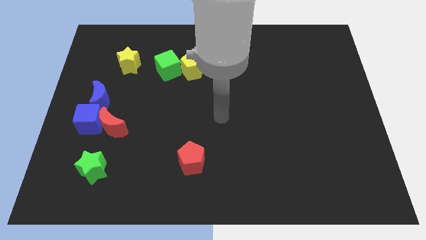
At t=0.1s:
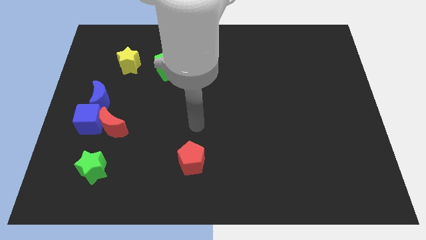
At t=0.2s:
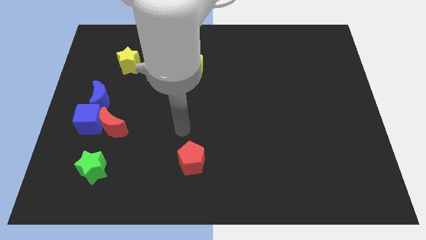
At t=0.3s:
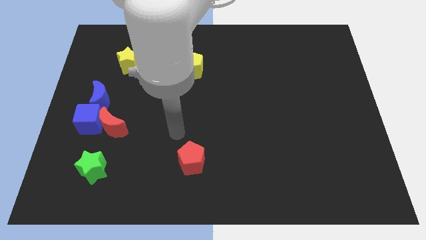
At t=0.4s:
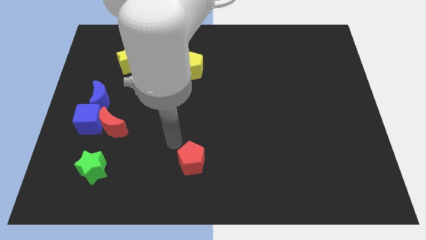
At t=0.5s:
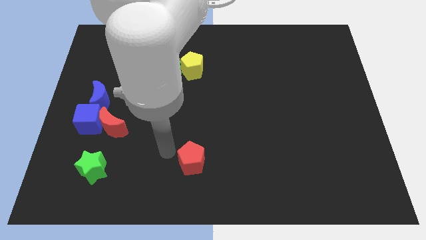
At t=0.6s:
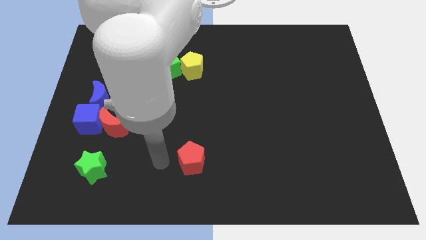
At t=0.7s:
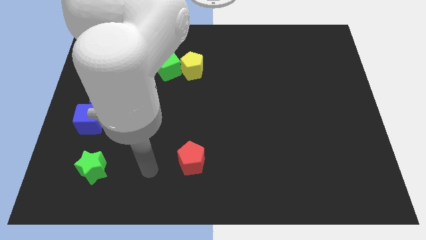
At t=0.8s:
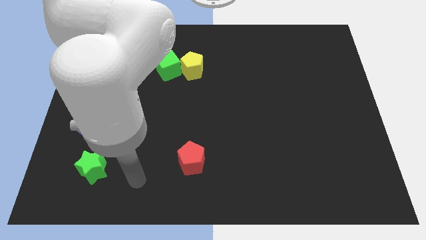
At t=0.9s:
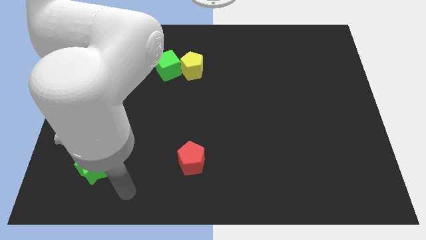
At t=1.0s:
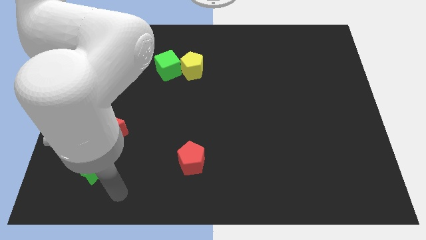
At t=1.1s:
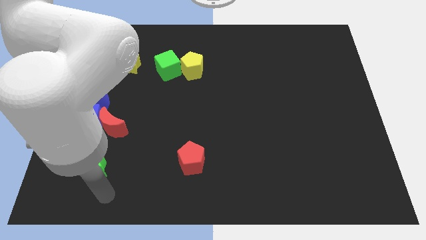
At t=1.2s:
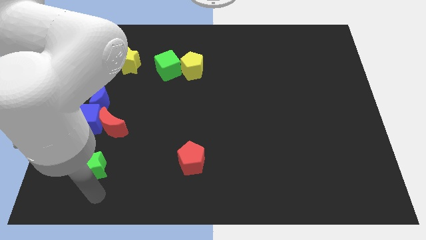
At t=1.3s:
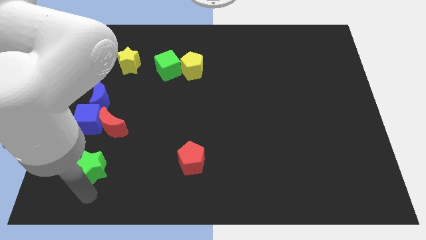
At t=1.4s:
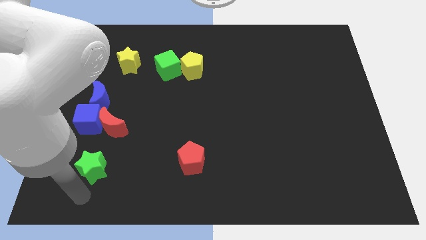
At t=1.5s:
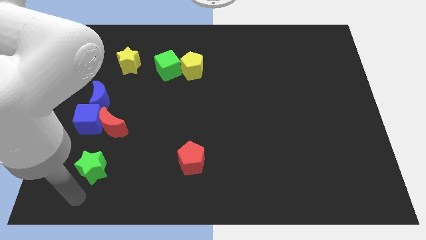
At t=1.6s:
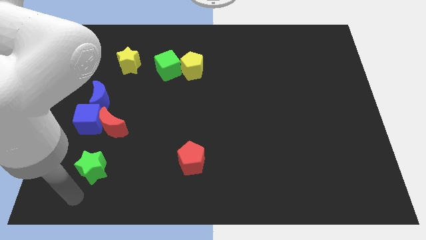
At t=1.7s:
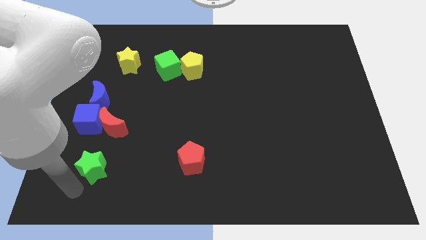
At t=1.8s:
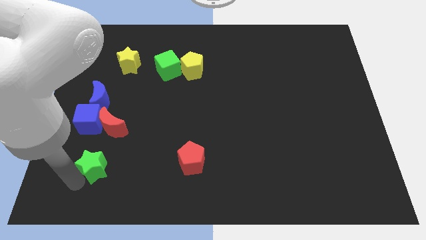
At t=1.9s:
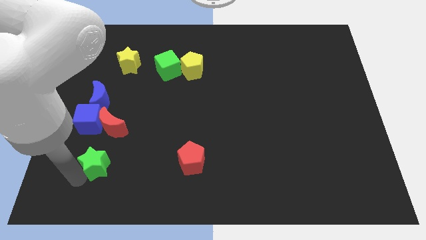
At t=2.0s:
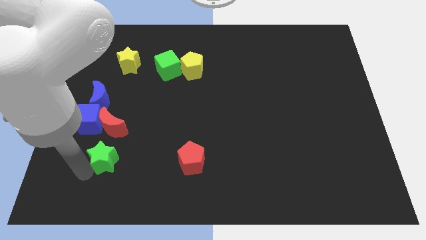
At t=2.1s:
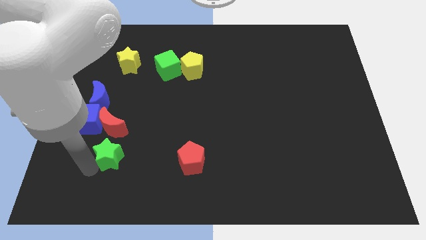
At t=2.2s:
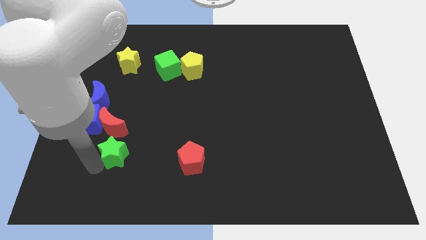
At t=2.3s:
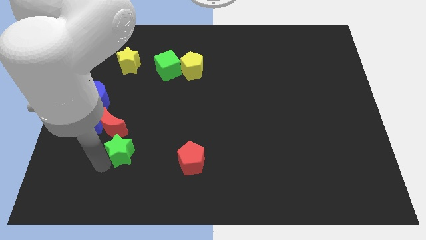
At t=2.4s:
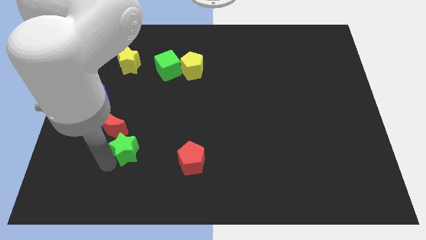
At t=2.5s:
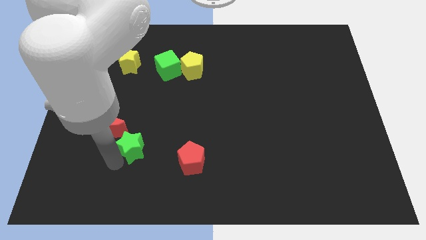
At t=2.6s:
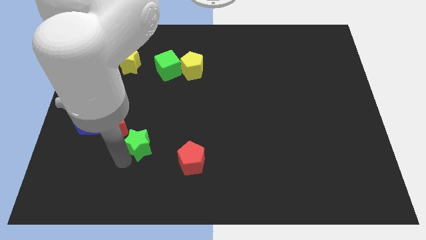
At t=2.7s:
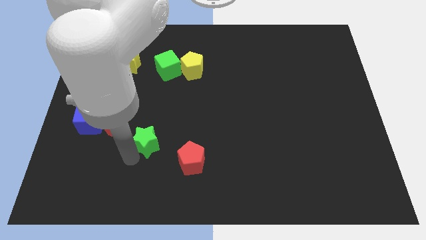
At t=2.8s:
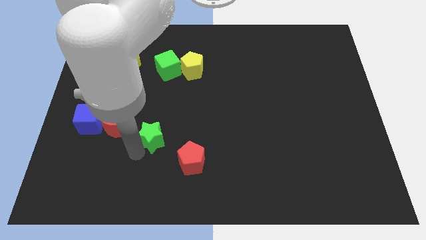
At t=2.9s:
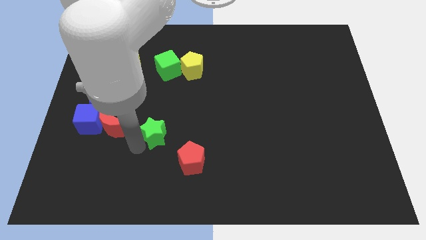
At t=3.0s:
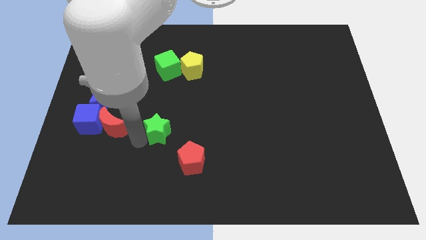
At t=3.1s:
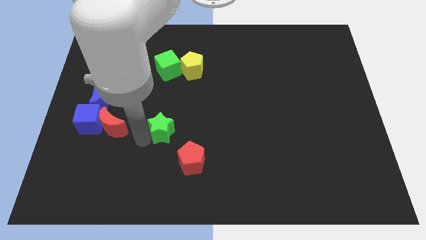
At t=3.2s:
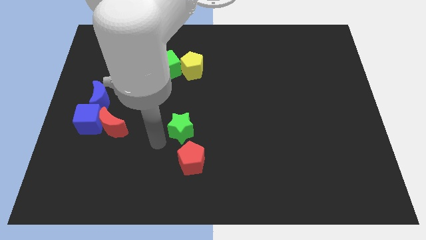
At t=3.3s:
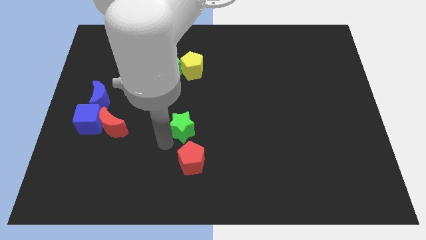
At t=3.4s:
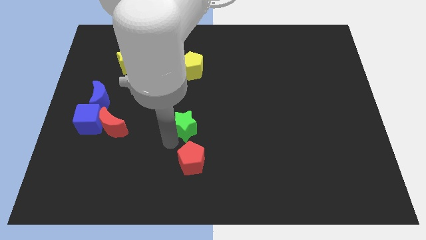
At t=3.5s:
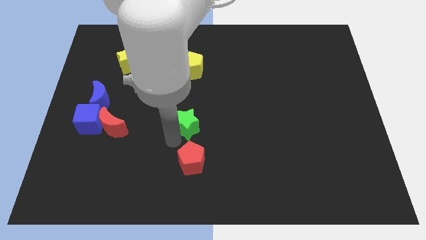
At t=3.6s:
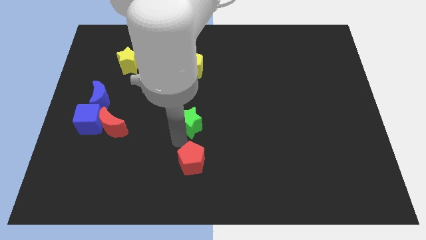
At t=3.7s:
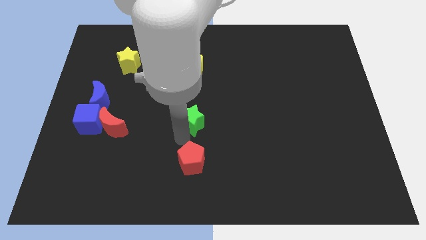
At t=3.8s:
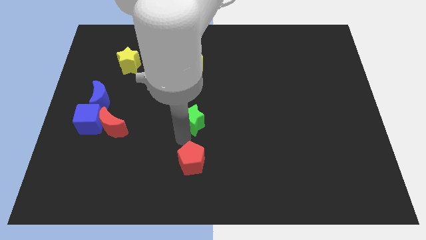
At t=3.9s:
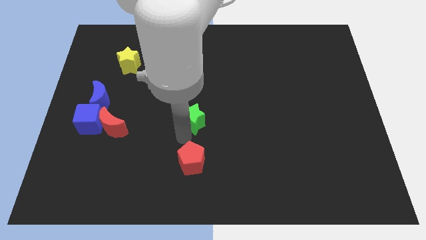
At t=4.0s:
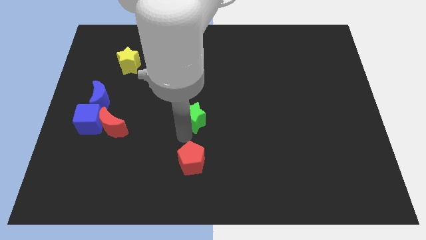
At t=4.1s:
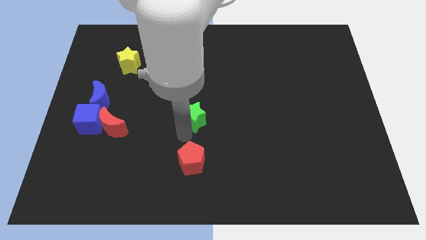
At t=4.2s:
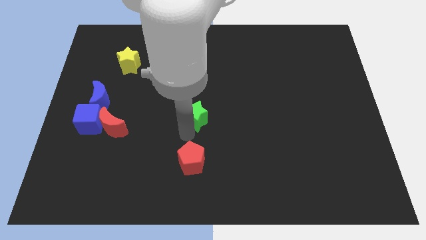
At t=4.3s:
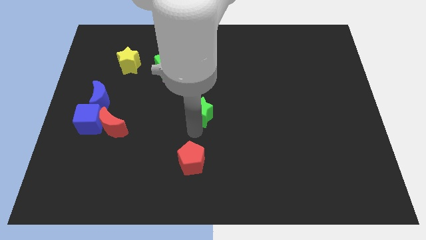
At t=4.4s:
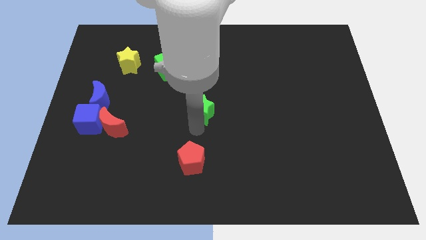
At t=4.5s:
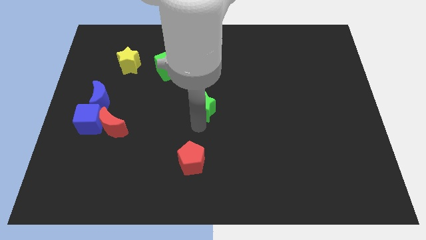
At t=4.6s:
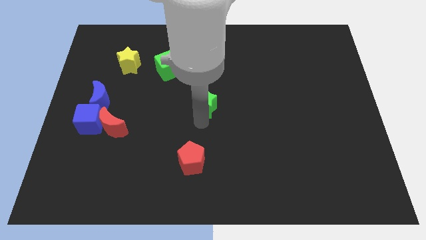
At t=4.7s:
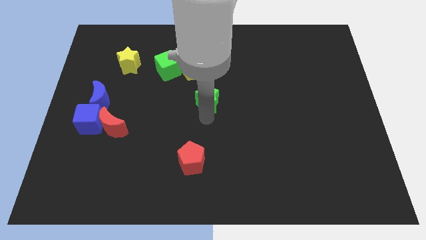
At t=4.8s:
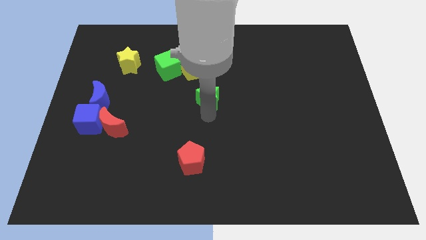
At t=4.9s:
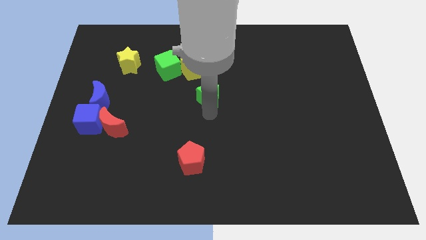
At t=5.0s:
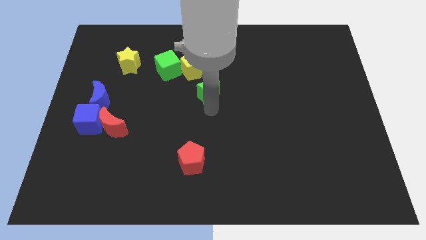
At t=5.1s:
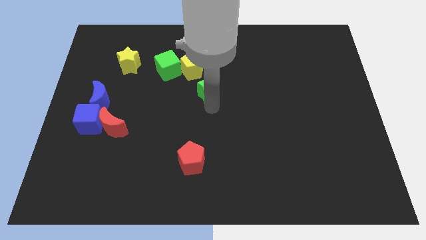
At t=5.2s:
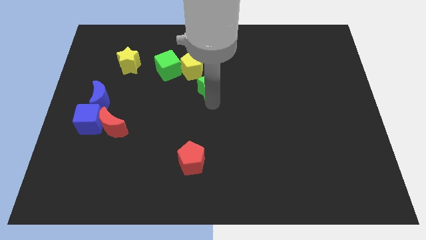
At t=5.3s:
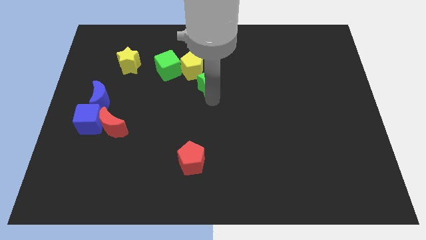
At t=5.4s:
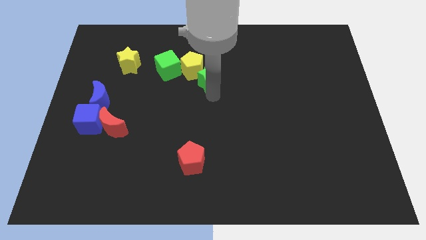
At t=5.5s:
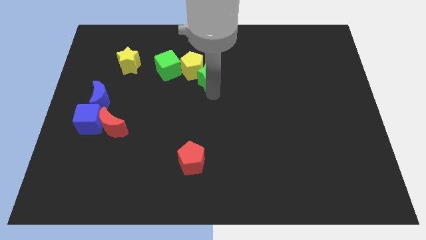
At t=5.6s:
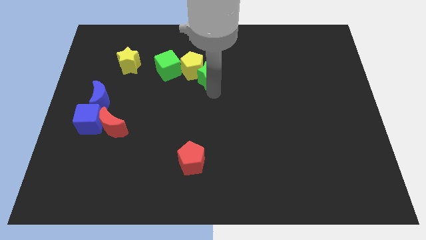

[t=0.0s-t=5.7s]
push the green star to the yellow pentagon

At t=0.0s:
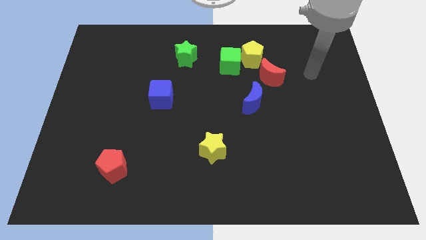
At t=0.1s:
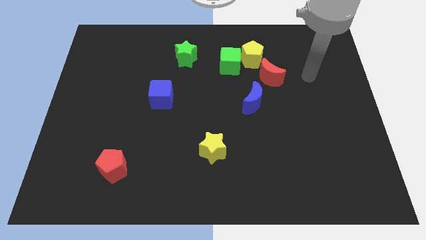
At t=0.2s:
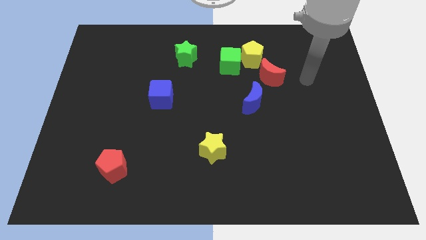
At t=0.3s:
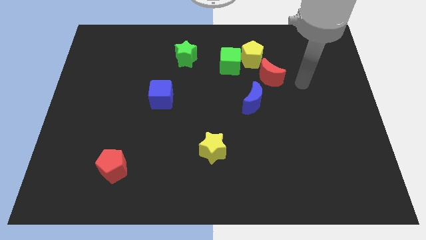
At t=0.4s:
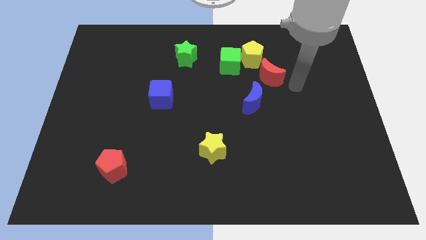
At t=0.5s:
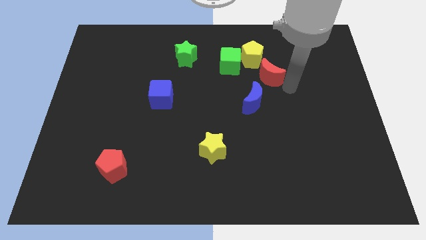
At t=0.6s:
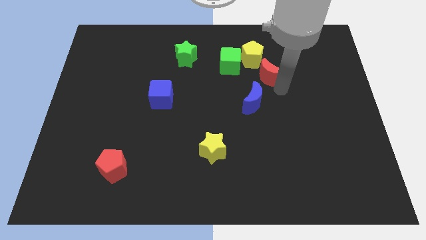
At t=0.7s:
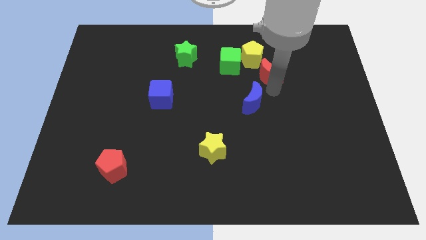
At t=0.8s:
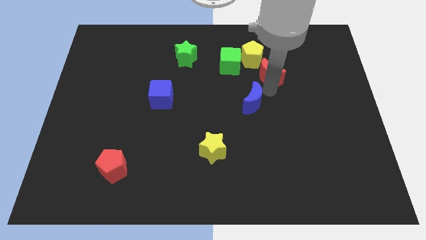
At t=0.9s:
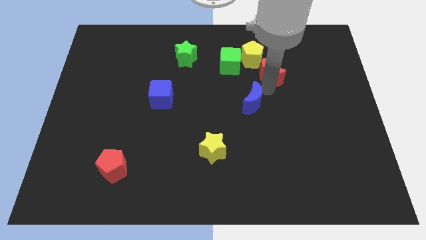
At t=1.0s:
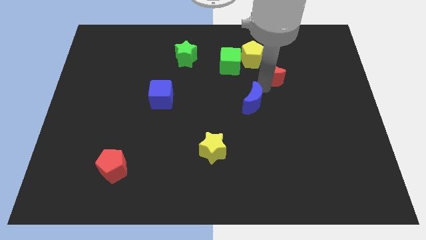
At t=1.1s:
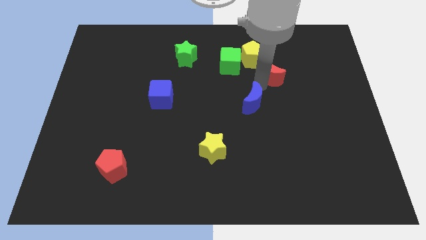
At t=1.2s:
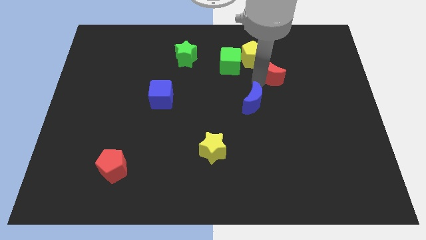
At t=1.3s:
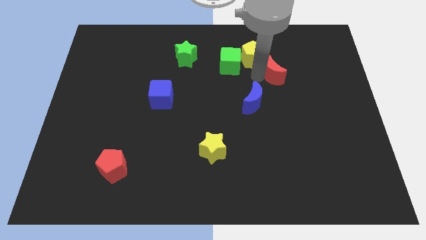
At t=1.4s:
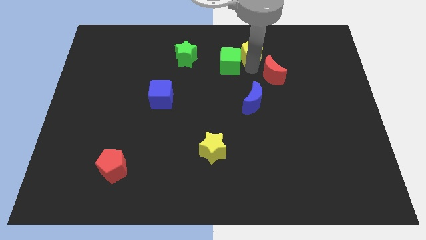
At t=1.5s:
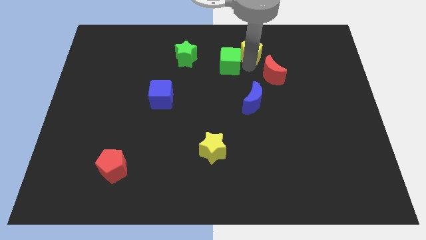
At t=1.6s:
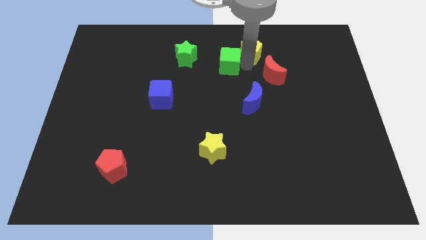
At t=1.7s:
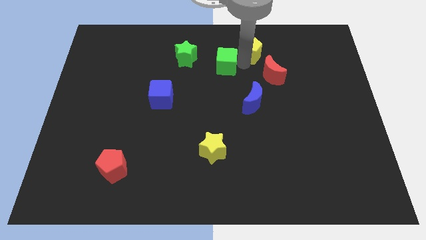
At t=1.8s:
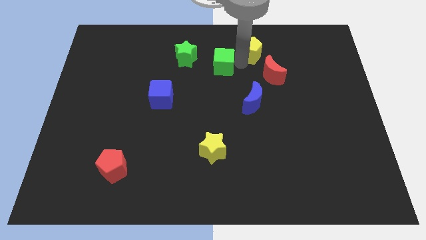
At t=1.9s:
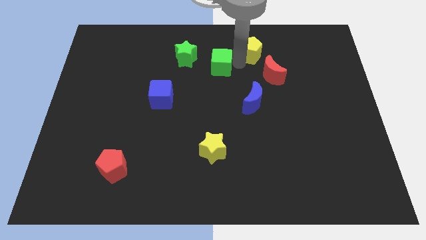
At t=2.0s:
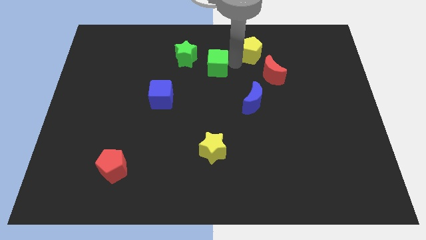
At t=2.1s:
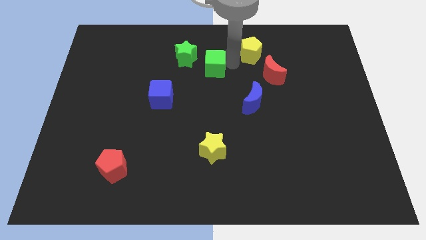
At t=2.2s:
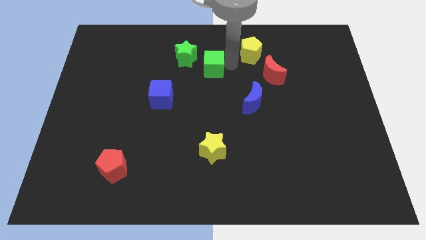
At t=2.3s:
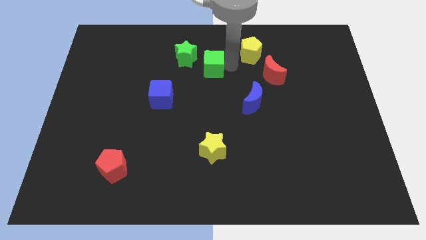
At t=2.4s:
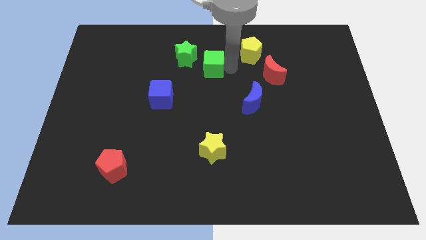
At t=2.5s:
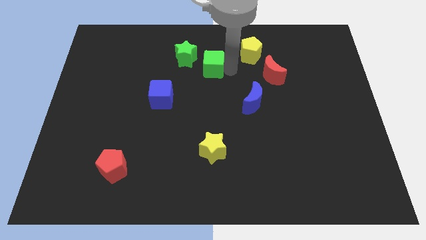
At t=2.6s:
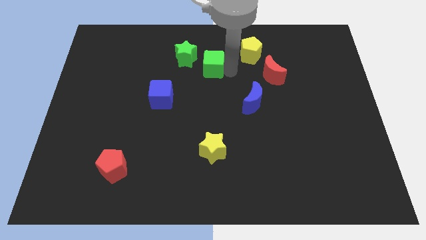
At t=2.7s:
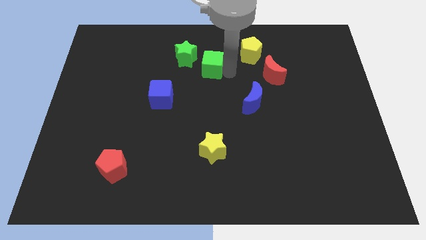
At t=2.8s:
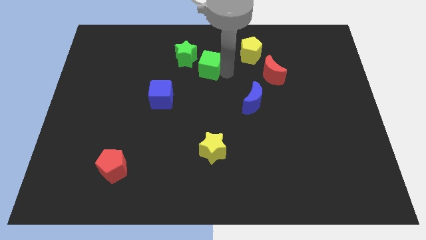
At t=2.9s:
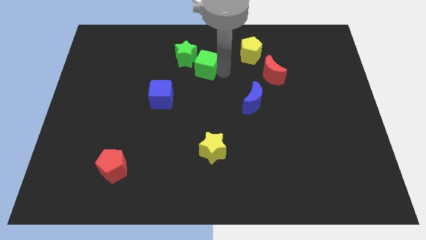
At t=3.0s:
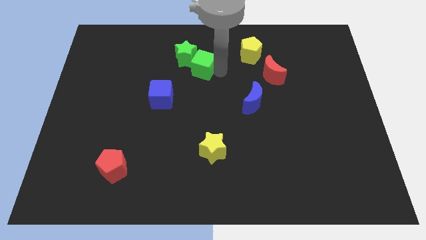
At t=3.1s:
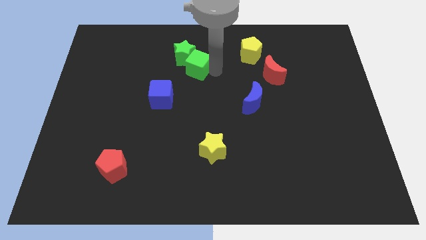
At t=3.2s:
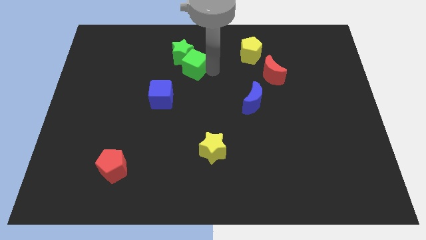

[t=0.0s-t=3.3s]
slide the green cube to the green star
